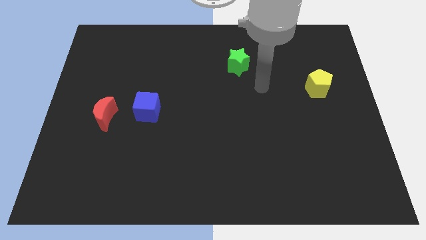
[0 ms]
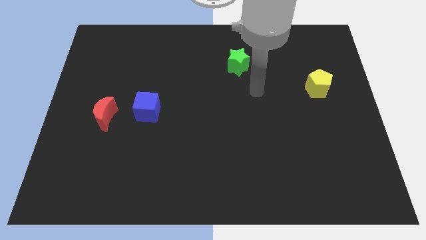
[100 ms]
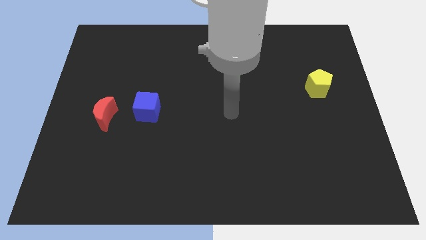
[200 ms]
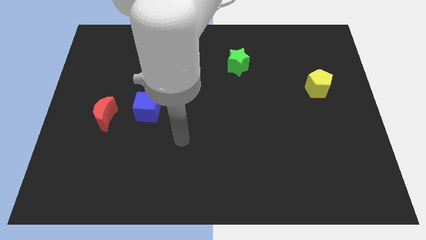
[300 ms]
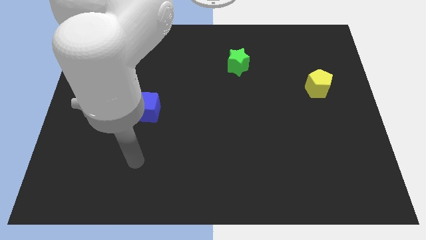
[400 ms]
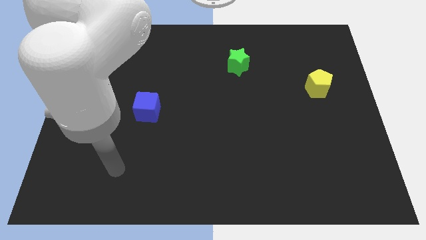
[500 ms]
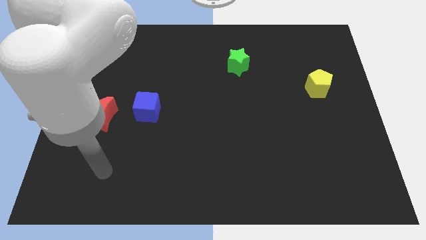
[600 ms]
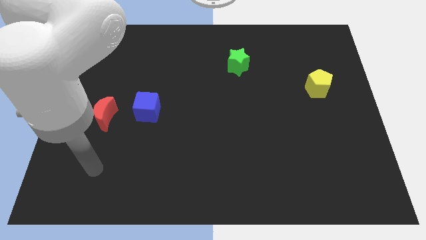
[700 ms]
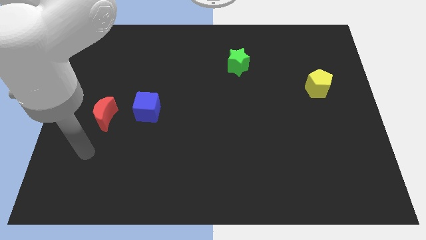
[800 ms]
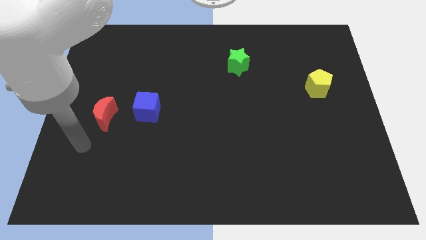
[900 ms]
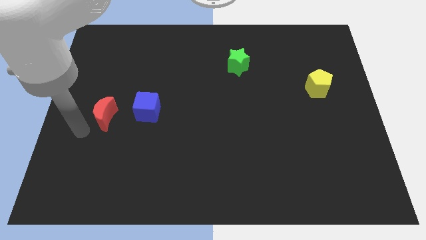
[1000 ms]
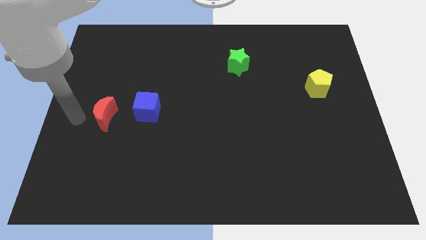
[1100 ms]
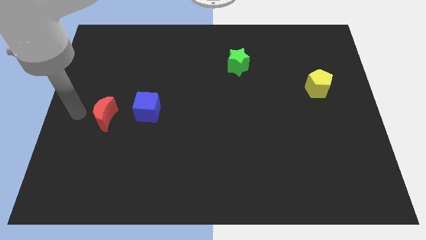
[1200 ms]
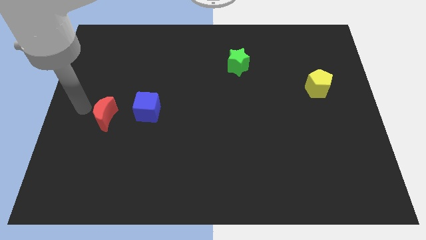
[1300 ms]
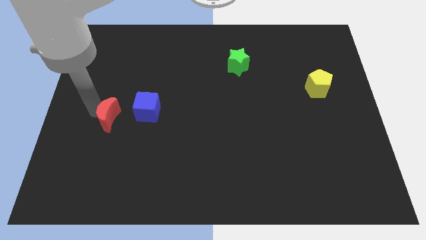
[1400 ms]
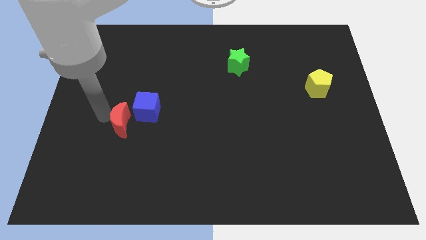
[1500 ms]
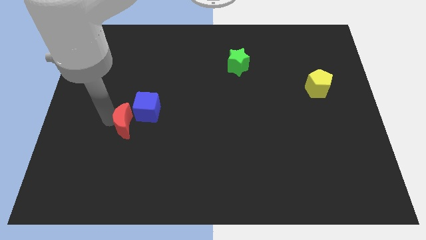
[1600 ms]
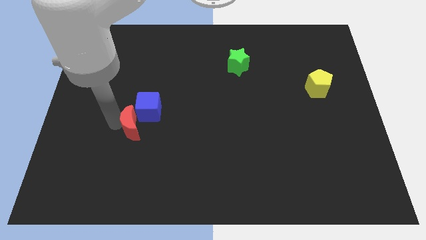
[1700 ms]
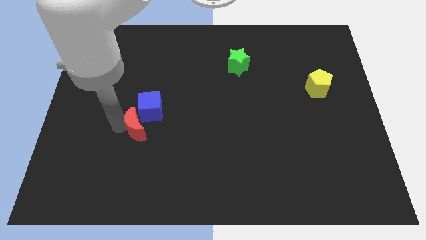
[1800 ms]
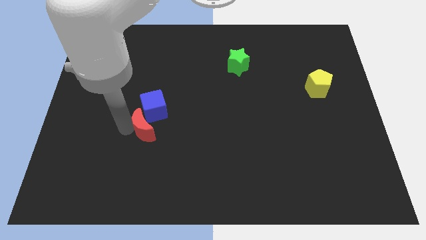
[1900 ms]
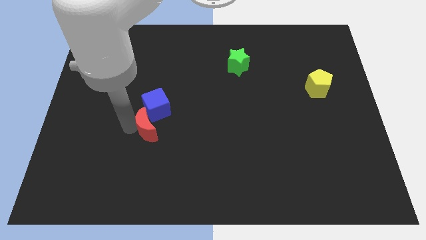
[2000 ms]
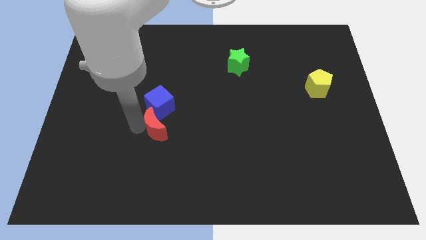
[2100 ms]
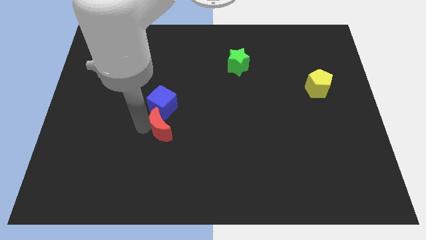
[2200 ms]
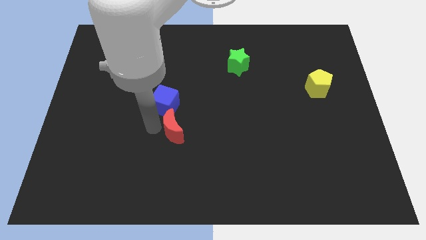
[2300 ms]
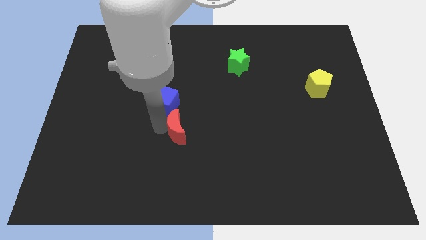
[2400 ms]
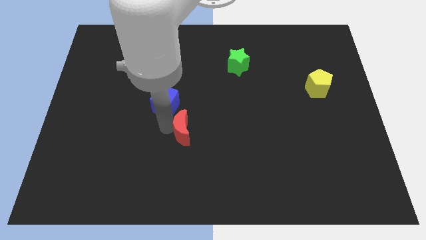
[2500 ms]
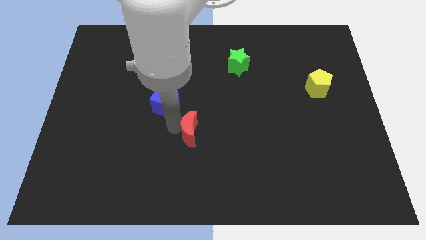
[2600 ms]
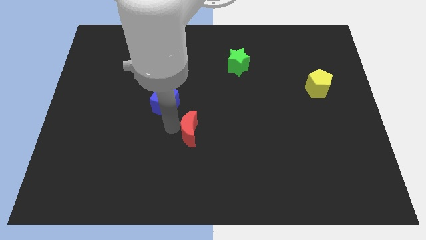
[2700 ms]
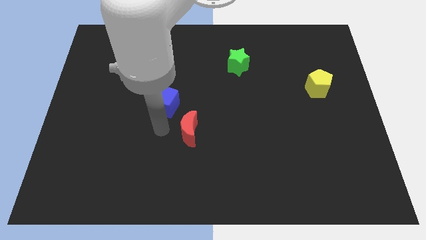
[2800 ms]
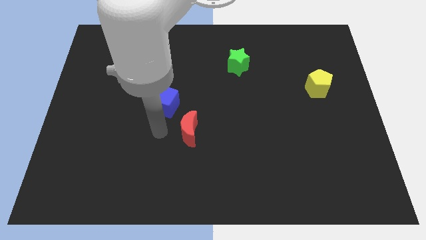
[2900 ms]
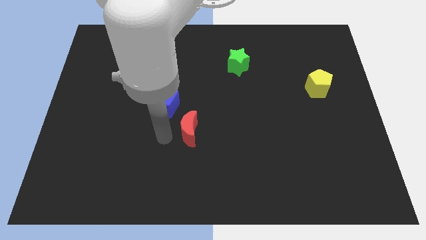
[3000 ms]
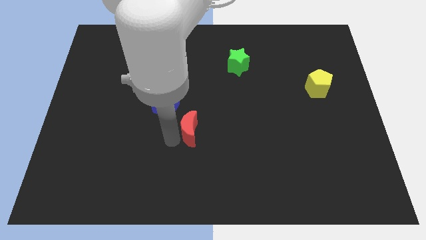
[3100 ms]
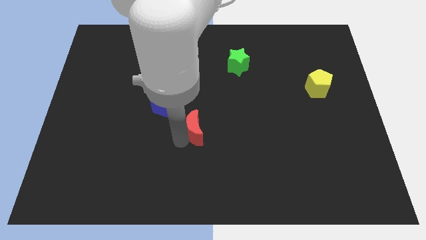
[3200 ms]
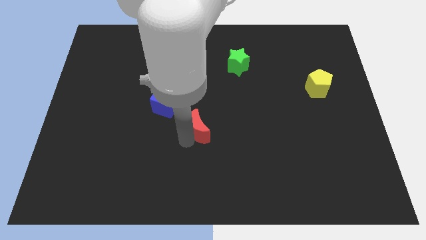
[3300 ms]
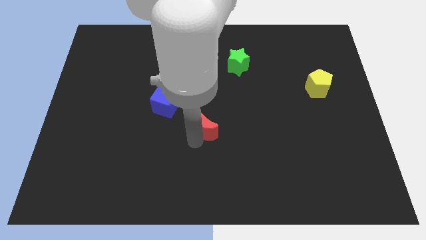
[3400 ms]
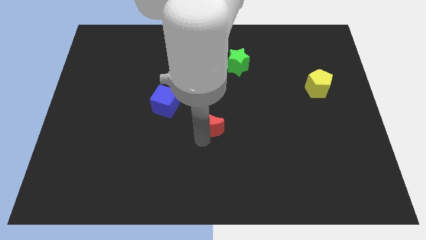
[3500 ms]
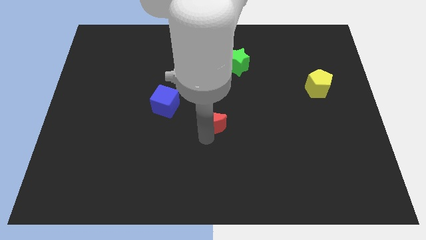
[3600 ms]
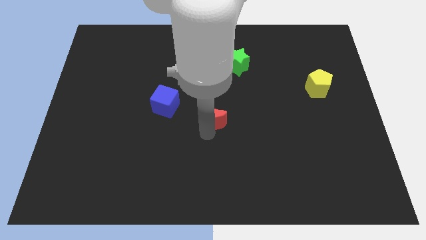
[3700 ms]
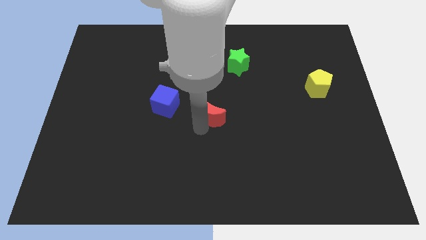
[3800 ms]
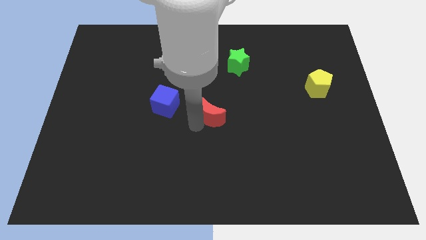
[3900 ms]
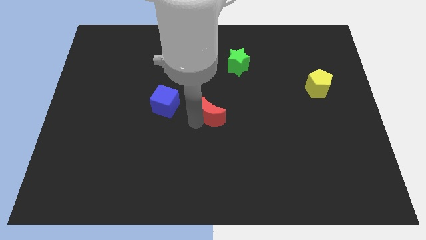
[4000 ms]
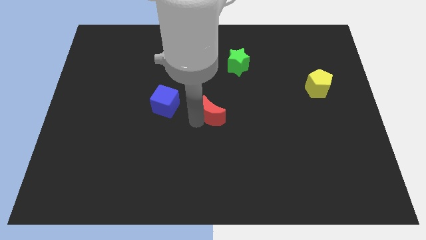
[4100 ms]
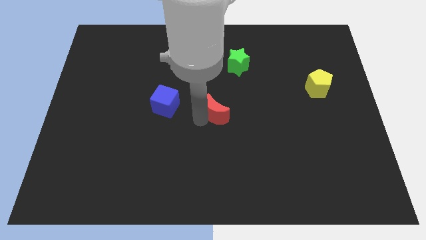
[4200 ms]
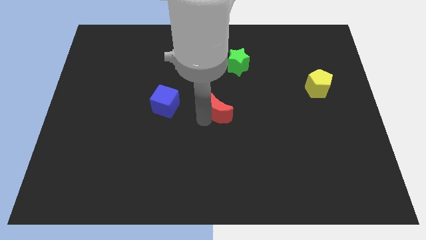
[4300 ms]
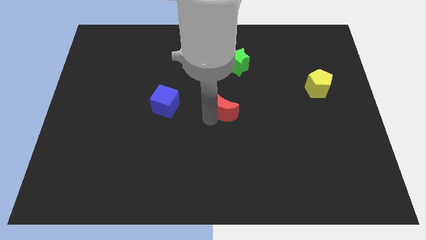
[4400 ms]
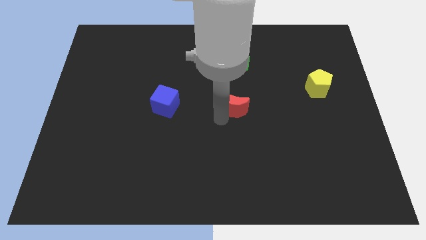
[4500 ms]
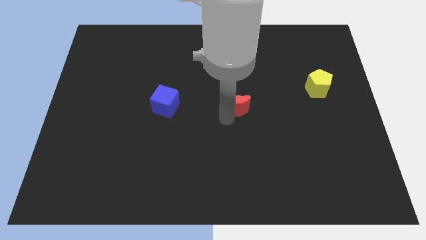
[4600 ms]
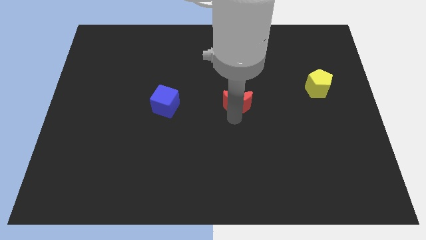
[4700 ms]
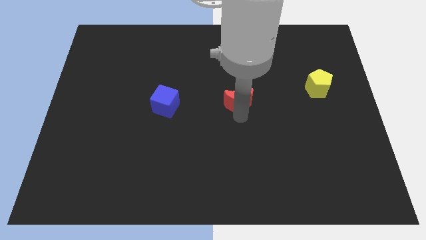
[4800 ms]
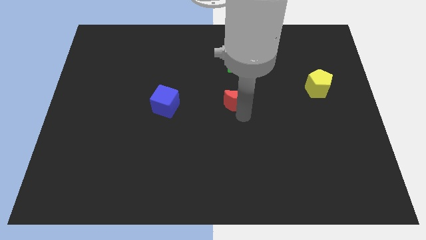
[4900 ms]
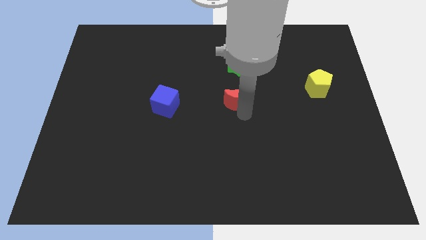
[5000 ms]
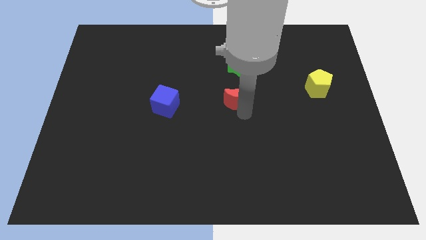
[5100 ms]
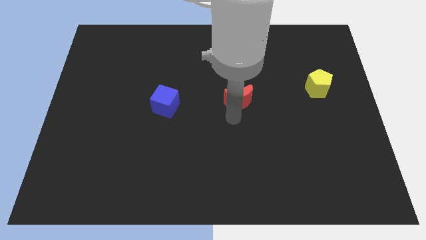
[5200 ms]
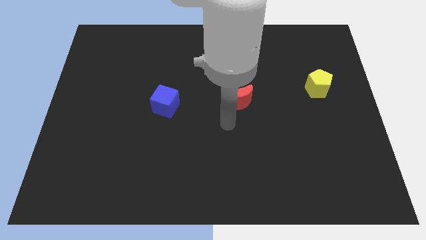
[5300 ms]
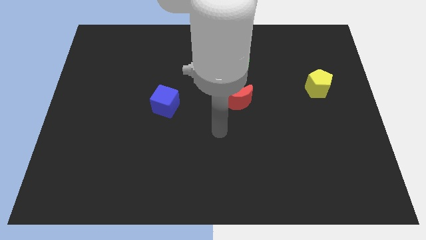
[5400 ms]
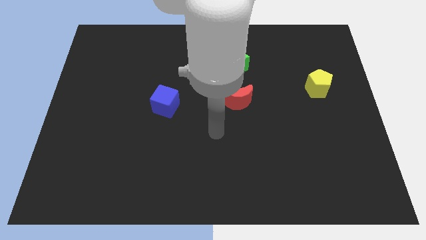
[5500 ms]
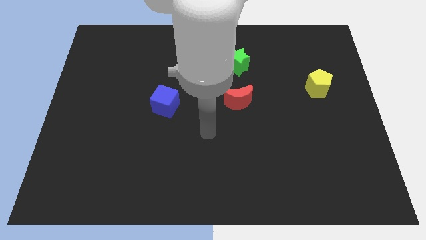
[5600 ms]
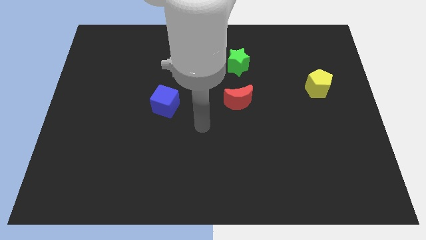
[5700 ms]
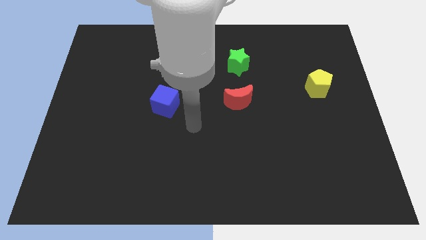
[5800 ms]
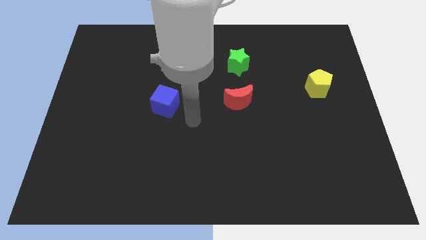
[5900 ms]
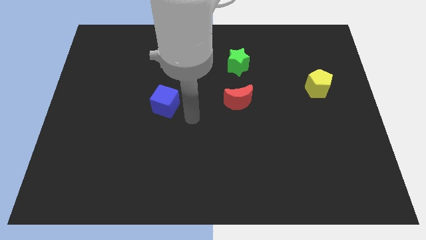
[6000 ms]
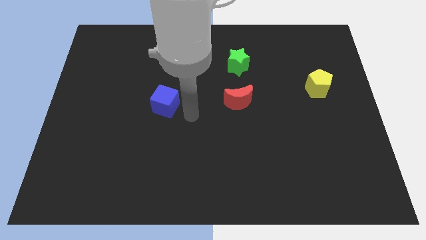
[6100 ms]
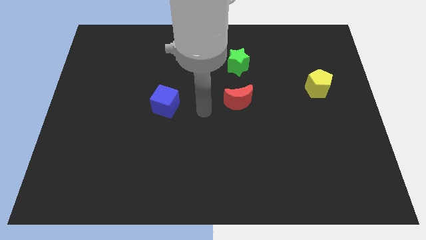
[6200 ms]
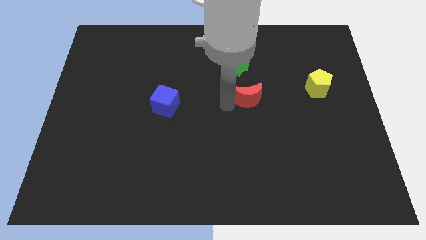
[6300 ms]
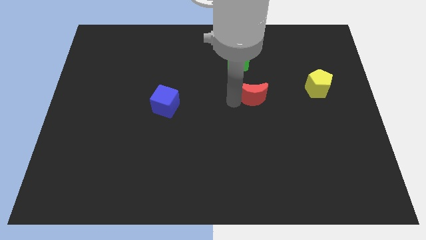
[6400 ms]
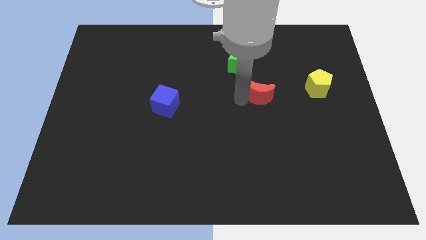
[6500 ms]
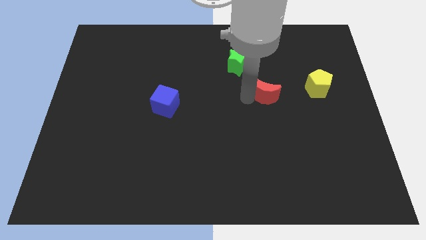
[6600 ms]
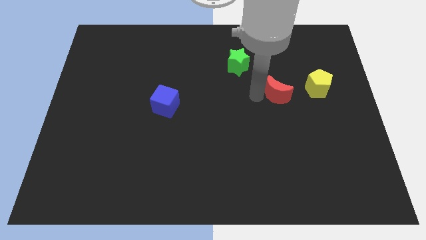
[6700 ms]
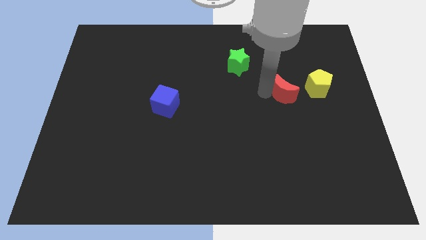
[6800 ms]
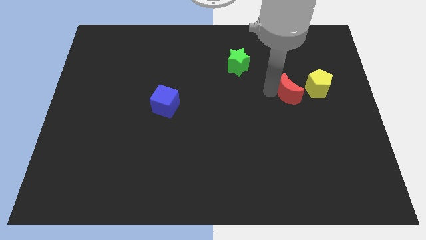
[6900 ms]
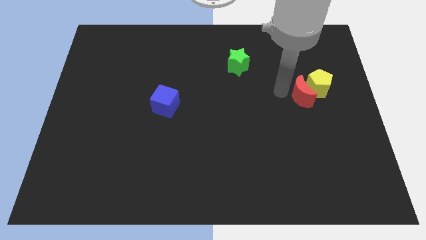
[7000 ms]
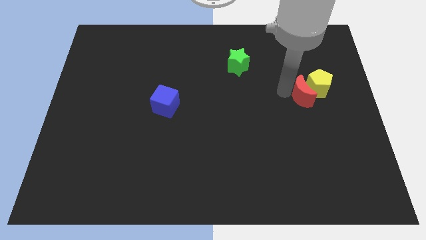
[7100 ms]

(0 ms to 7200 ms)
put the red block to the pentagon

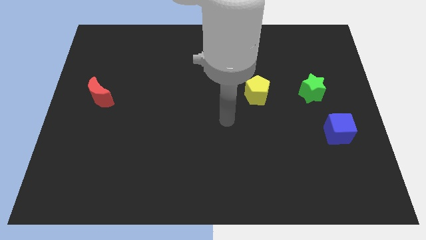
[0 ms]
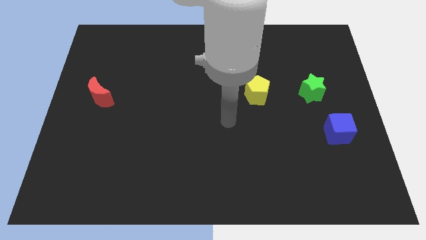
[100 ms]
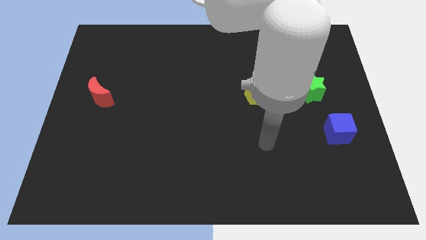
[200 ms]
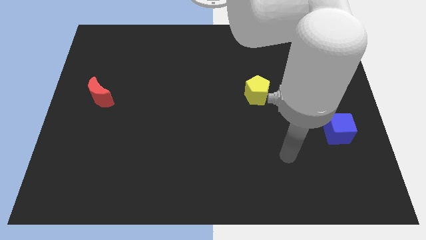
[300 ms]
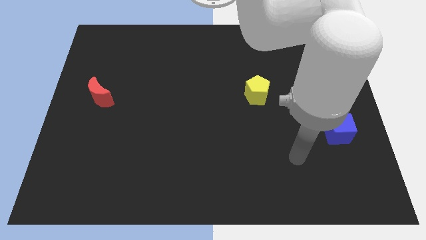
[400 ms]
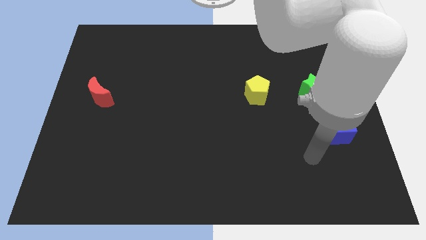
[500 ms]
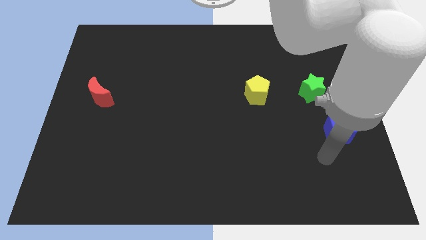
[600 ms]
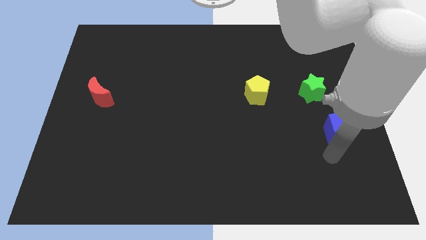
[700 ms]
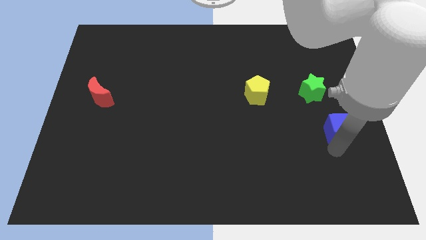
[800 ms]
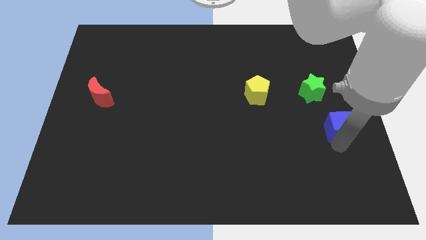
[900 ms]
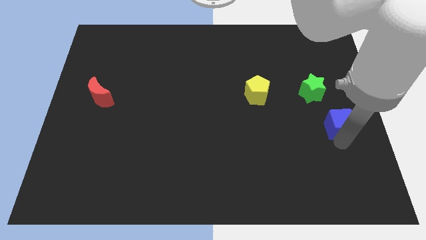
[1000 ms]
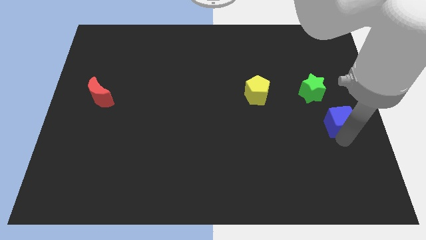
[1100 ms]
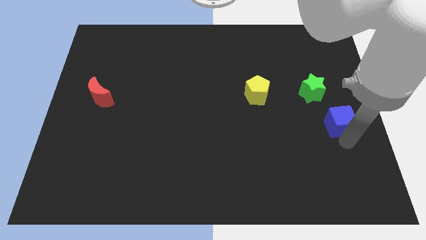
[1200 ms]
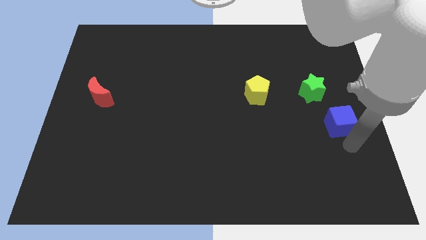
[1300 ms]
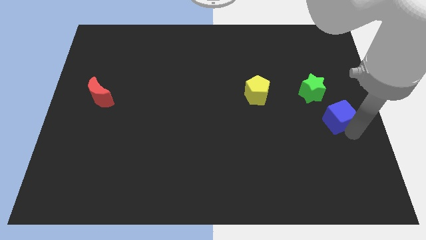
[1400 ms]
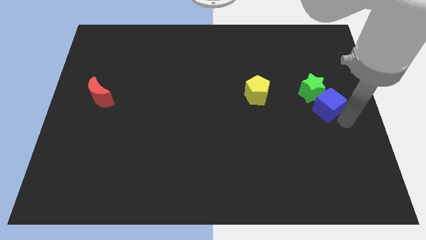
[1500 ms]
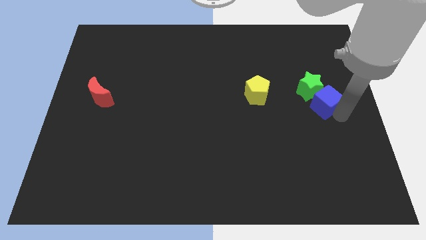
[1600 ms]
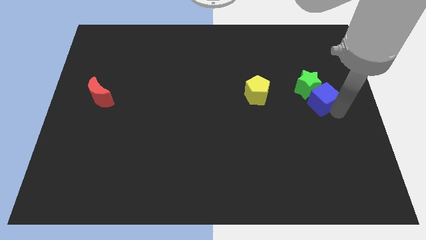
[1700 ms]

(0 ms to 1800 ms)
push the blue cube to the star
